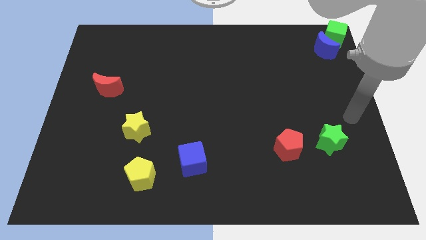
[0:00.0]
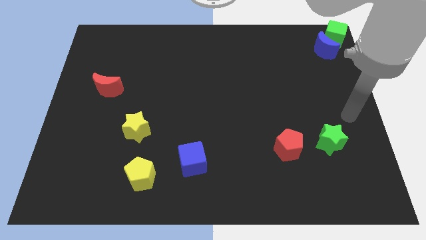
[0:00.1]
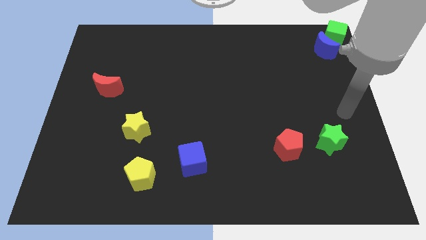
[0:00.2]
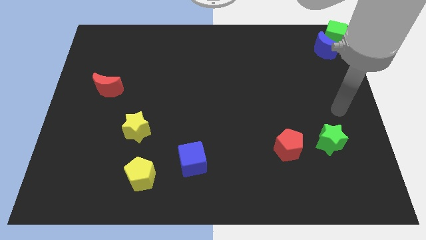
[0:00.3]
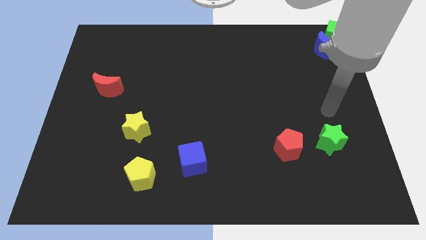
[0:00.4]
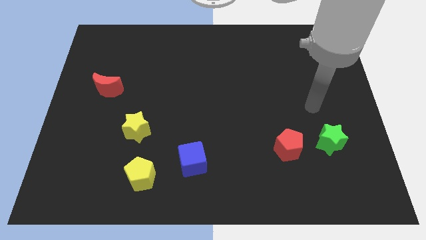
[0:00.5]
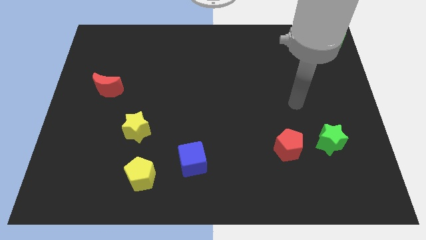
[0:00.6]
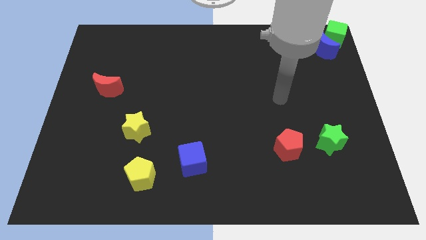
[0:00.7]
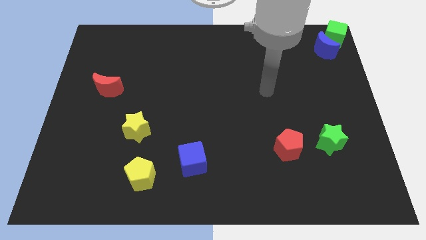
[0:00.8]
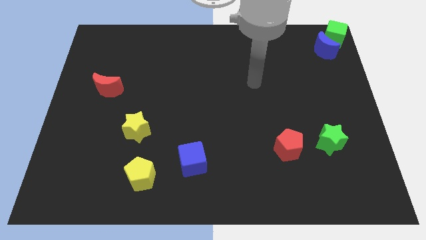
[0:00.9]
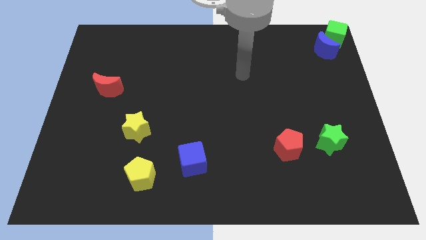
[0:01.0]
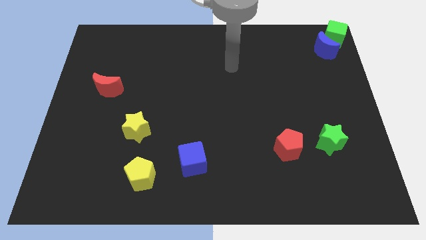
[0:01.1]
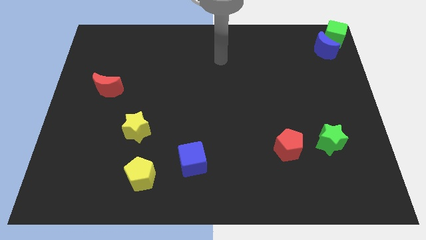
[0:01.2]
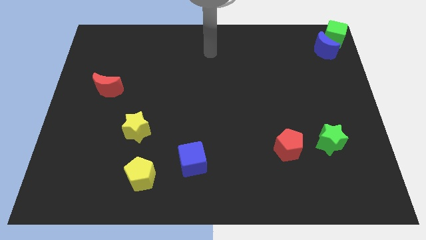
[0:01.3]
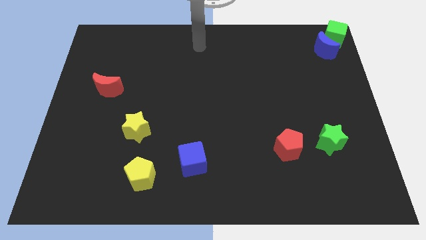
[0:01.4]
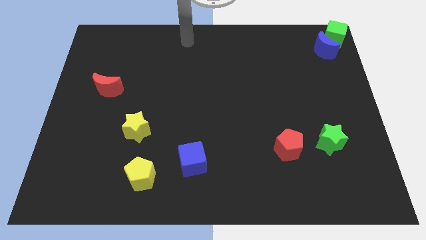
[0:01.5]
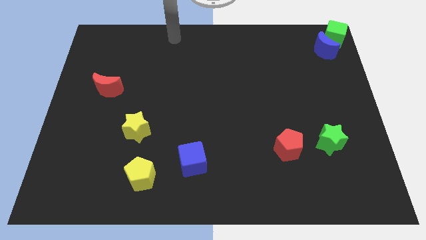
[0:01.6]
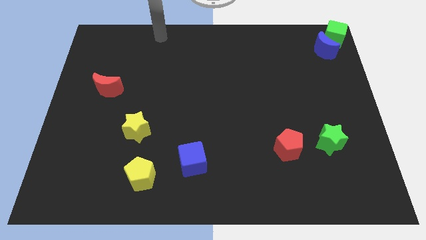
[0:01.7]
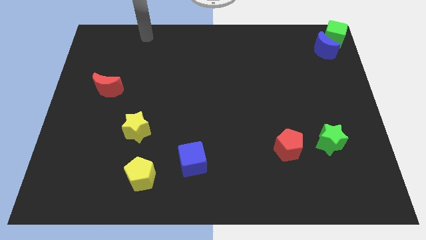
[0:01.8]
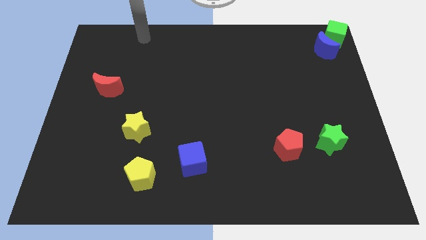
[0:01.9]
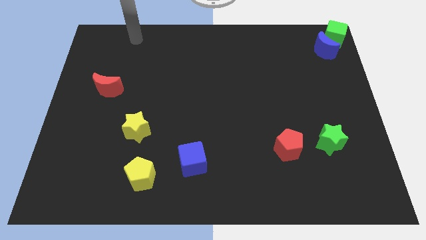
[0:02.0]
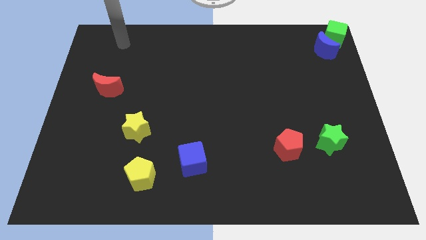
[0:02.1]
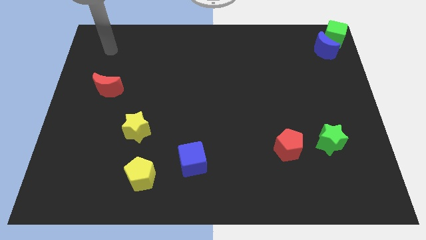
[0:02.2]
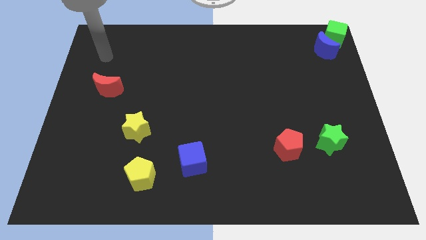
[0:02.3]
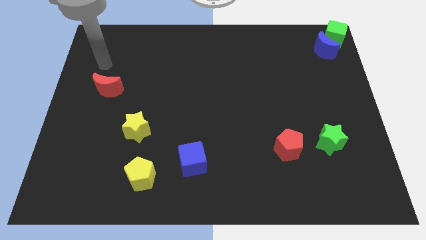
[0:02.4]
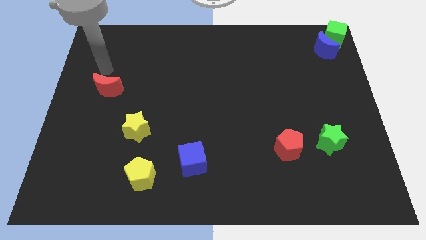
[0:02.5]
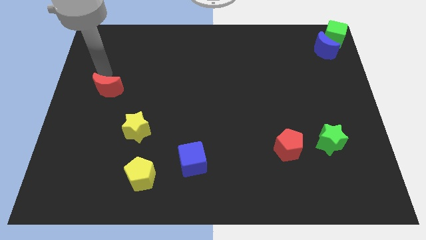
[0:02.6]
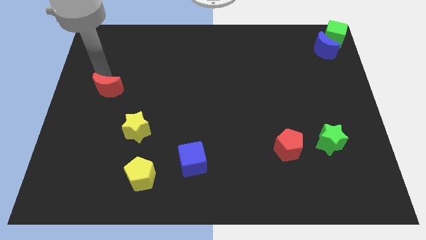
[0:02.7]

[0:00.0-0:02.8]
move your arm and point on top of the red crescent

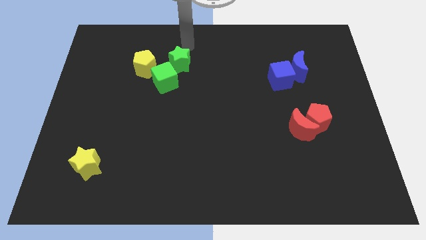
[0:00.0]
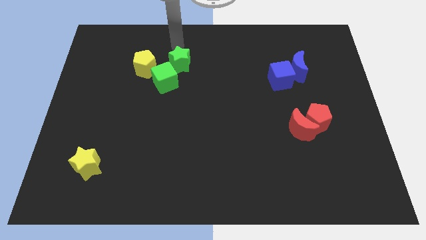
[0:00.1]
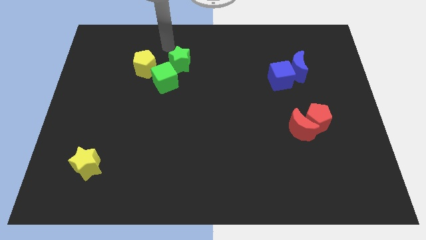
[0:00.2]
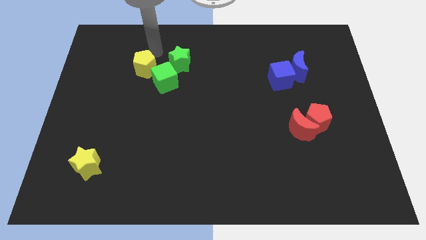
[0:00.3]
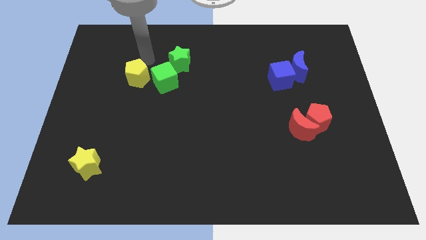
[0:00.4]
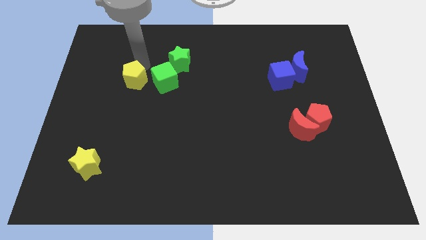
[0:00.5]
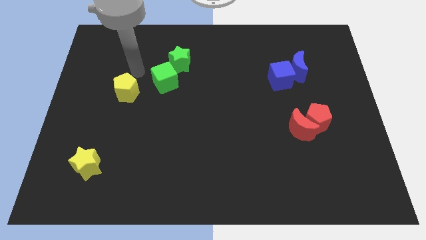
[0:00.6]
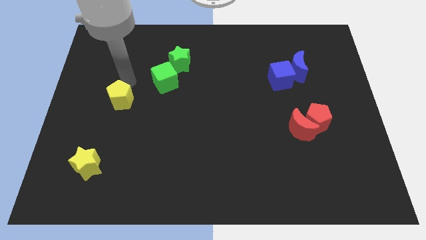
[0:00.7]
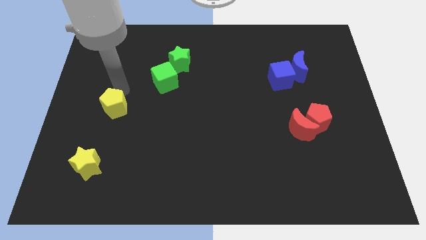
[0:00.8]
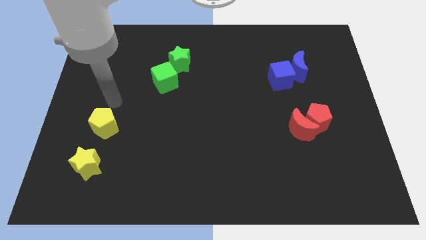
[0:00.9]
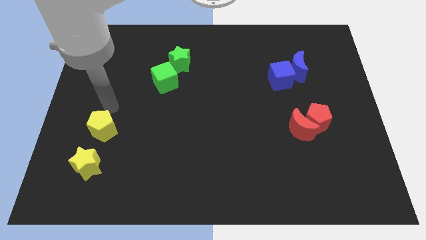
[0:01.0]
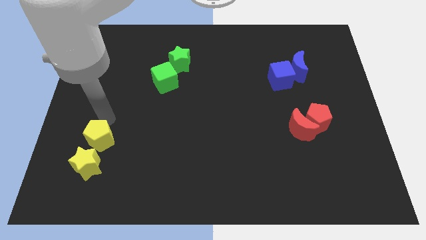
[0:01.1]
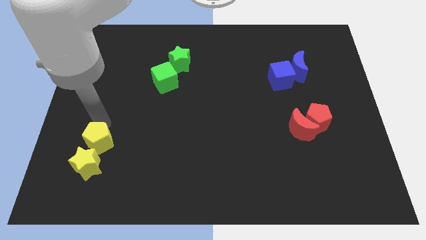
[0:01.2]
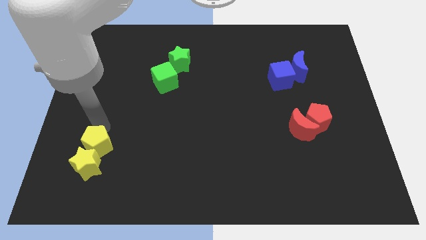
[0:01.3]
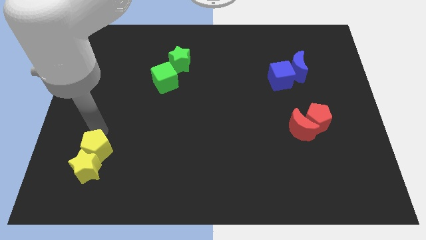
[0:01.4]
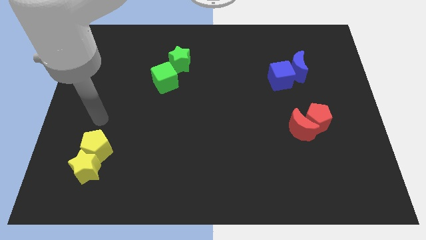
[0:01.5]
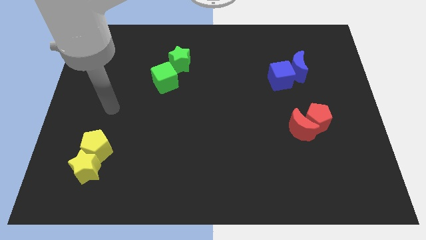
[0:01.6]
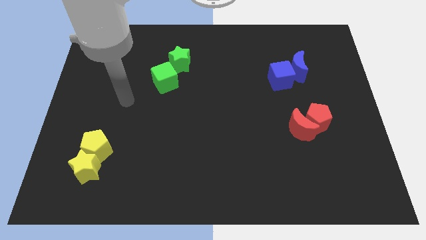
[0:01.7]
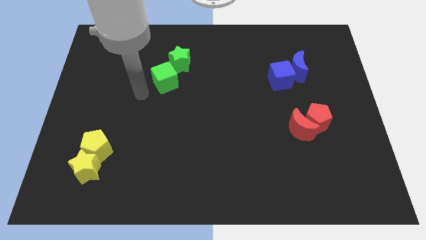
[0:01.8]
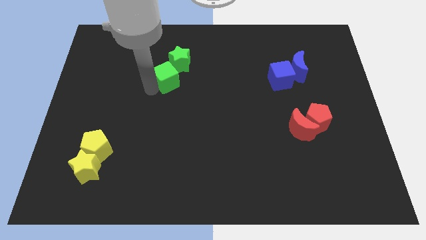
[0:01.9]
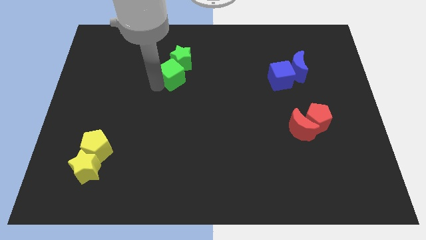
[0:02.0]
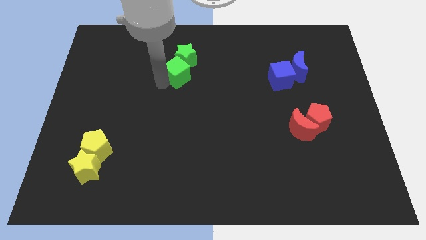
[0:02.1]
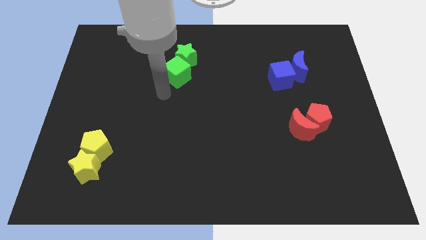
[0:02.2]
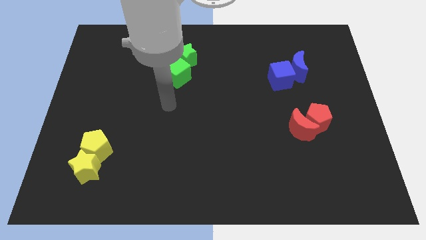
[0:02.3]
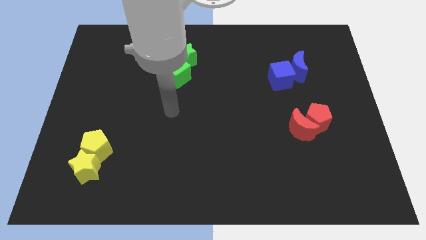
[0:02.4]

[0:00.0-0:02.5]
push the green and yellow blocks in opposite directions

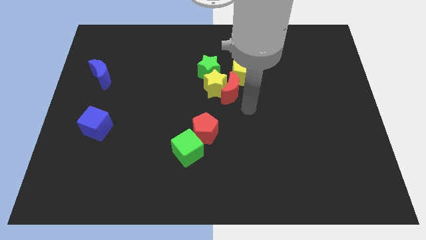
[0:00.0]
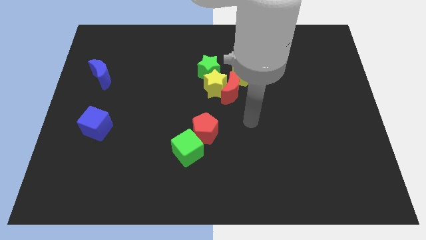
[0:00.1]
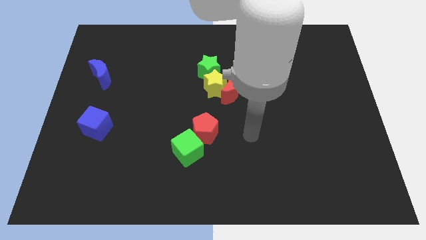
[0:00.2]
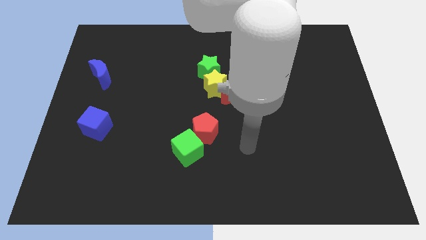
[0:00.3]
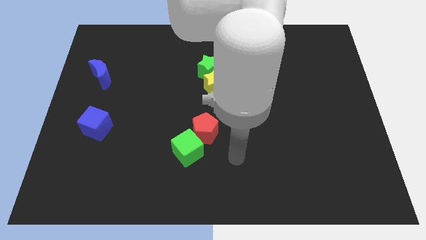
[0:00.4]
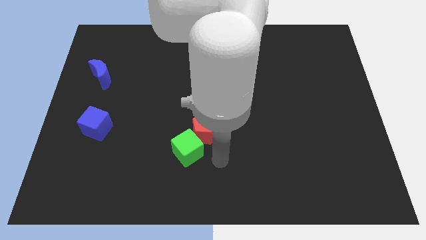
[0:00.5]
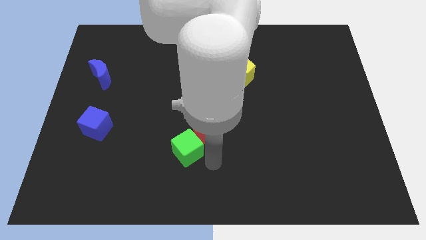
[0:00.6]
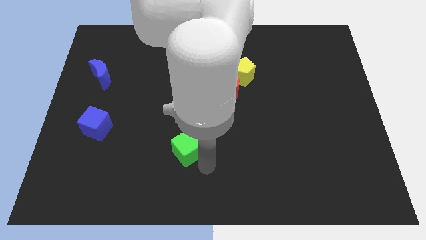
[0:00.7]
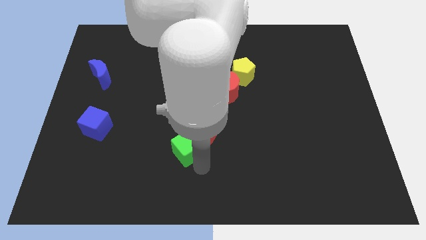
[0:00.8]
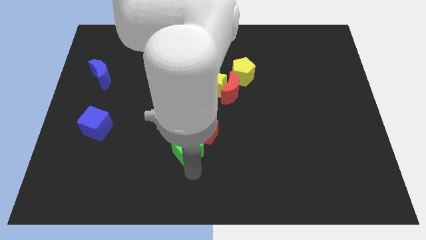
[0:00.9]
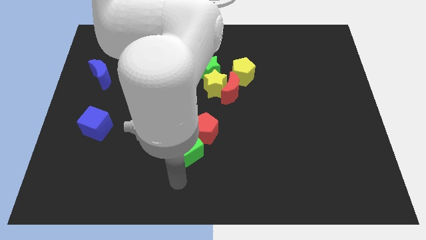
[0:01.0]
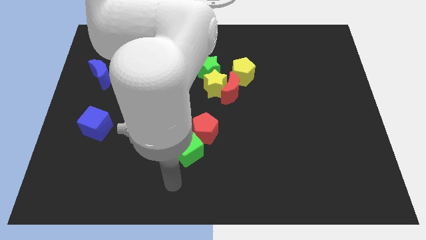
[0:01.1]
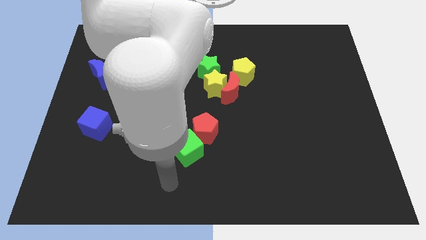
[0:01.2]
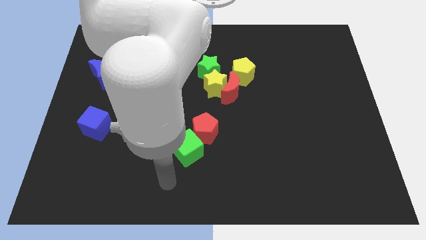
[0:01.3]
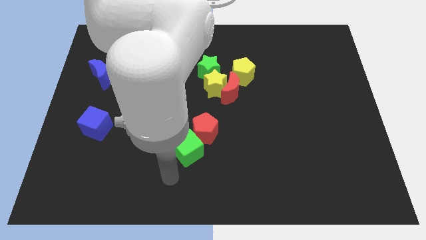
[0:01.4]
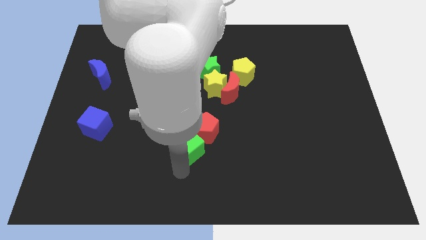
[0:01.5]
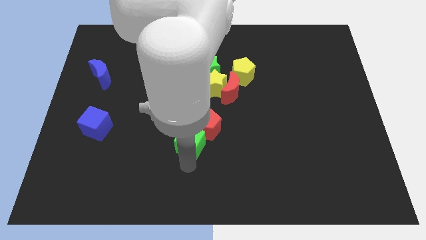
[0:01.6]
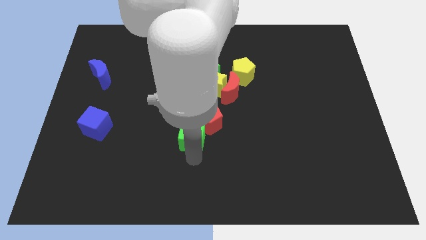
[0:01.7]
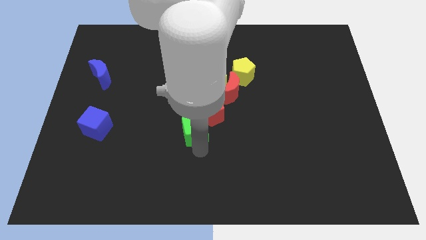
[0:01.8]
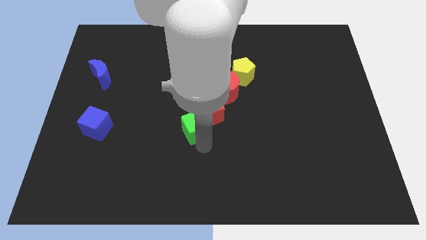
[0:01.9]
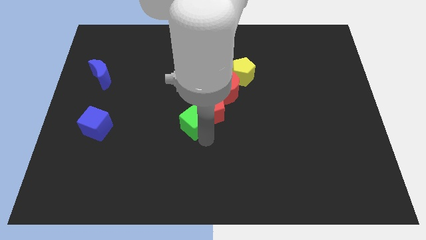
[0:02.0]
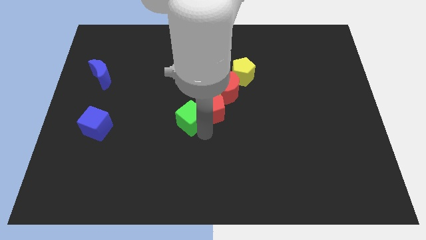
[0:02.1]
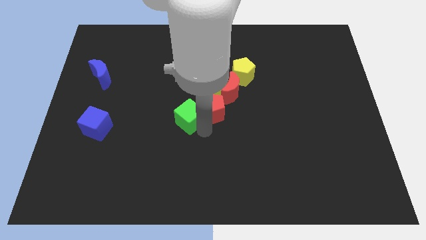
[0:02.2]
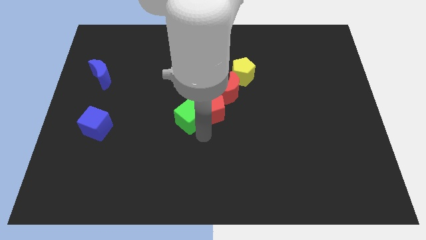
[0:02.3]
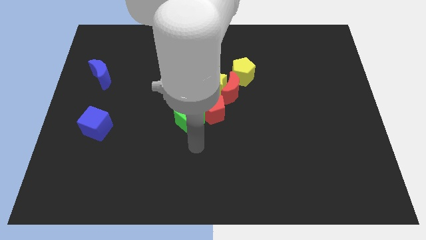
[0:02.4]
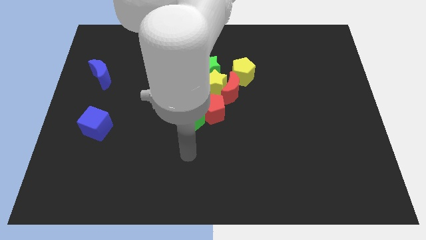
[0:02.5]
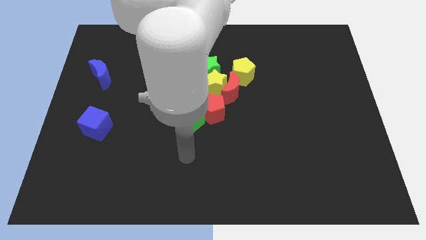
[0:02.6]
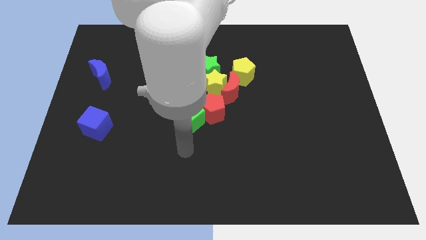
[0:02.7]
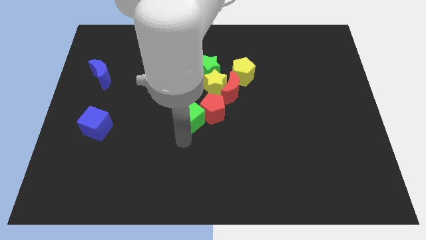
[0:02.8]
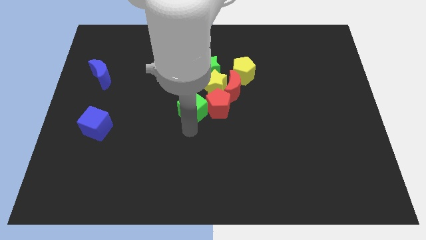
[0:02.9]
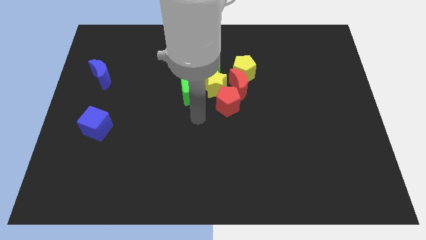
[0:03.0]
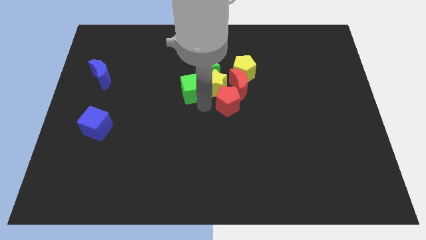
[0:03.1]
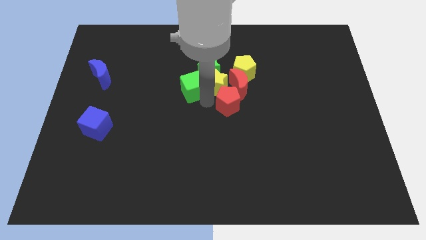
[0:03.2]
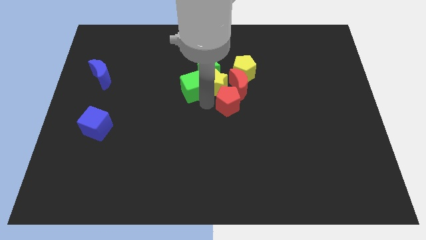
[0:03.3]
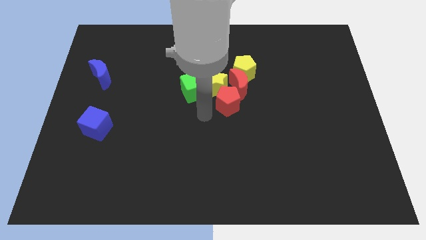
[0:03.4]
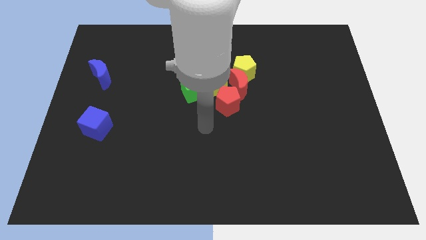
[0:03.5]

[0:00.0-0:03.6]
push the green cube into the group of blocks
